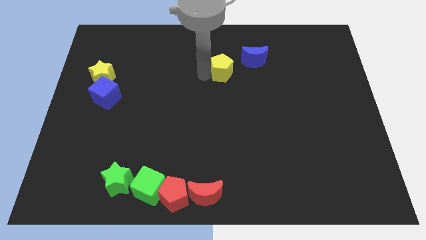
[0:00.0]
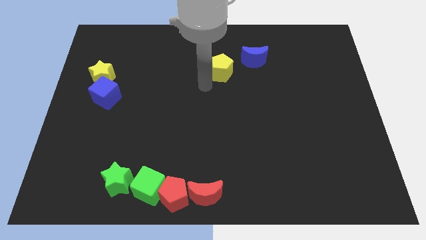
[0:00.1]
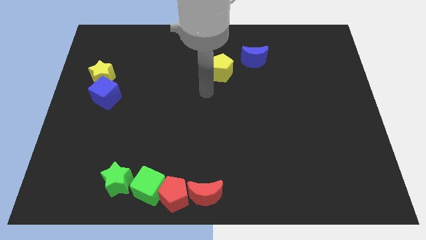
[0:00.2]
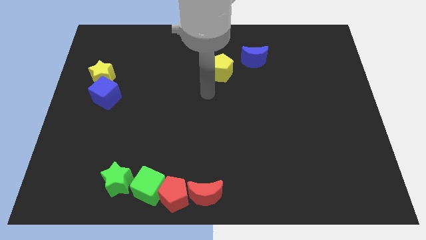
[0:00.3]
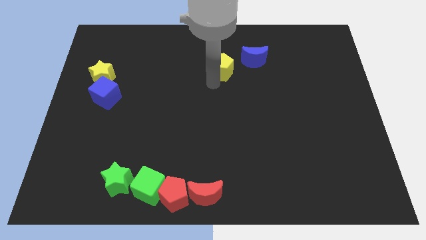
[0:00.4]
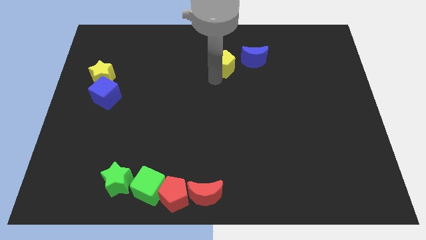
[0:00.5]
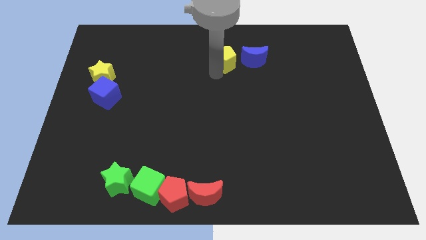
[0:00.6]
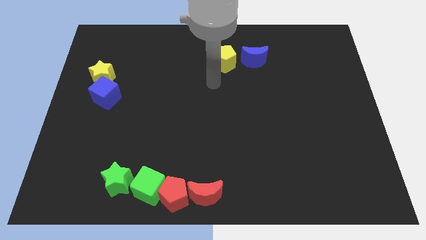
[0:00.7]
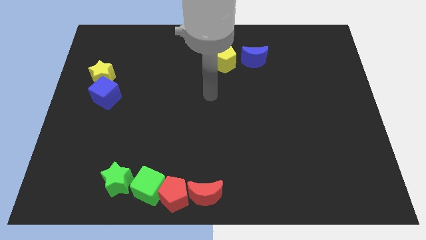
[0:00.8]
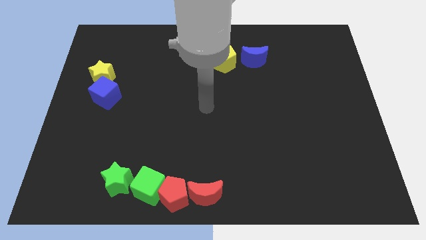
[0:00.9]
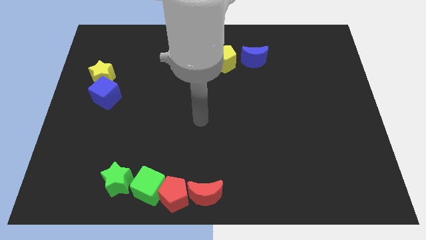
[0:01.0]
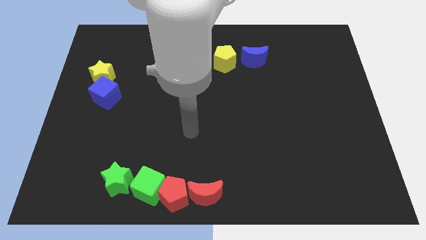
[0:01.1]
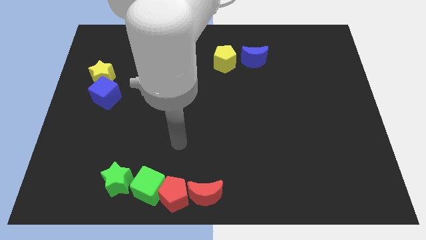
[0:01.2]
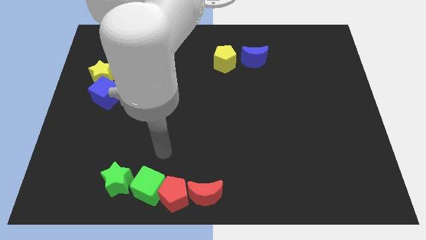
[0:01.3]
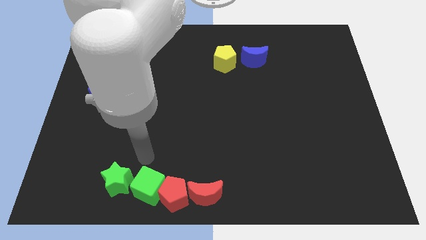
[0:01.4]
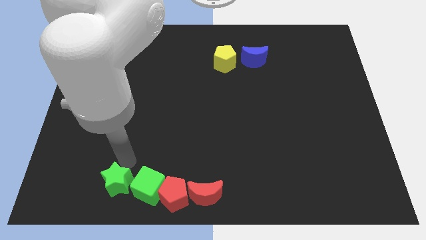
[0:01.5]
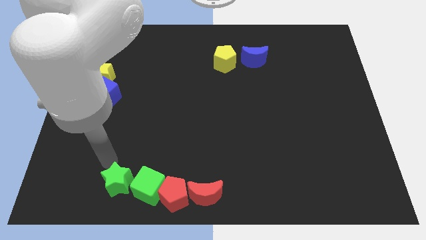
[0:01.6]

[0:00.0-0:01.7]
move your arm away from the yellow pentagon

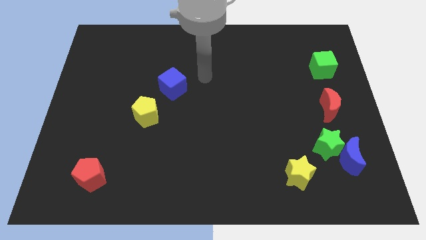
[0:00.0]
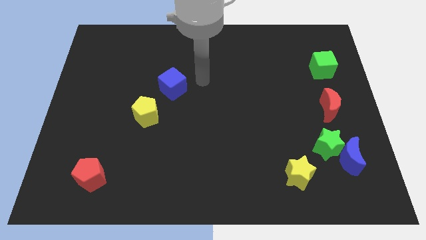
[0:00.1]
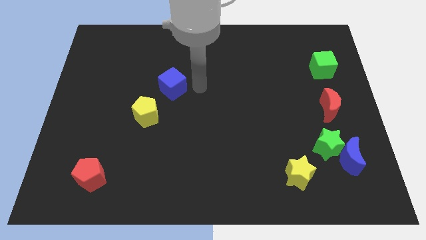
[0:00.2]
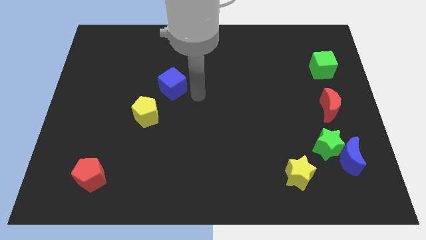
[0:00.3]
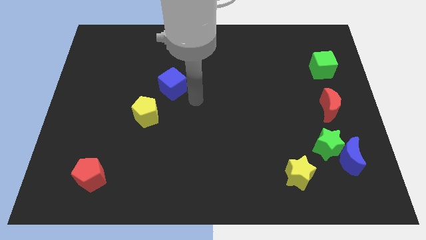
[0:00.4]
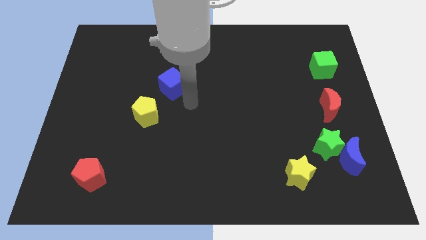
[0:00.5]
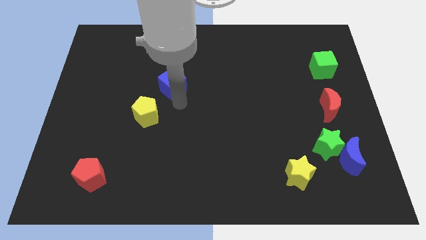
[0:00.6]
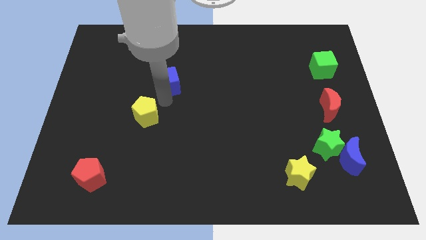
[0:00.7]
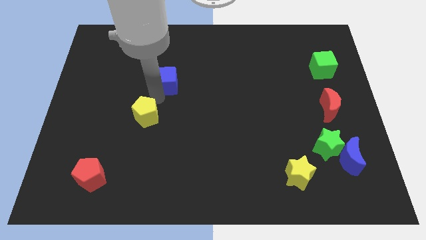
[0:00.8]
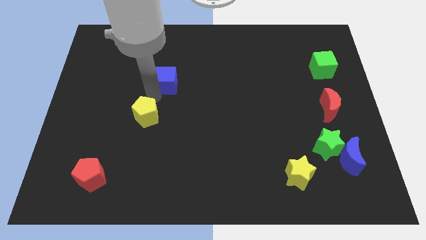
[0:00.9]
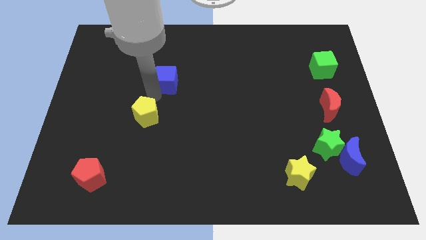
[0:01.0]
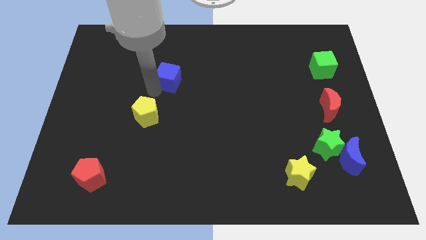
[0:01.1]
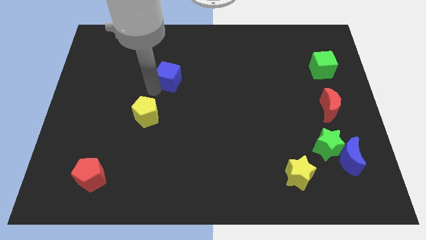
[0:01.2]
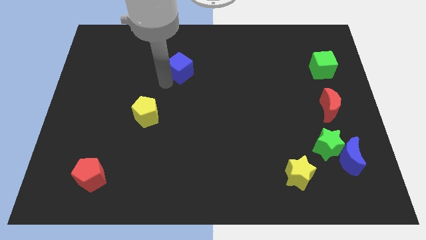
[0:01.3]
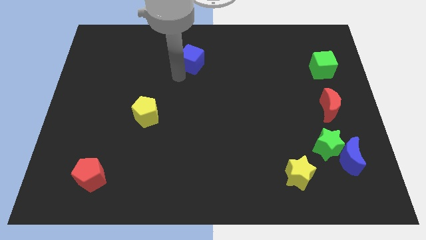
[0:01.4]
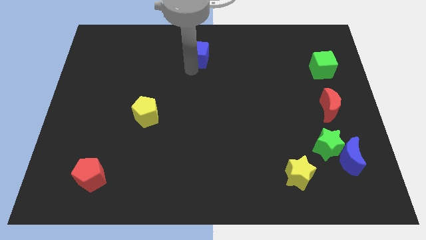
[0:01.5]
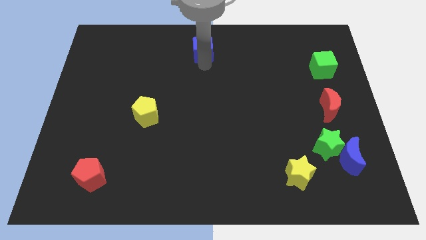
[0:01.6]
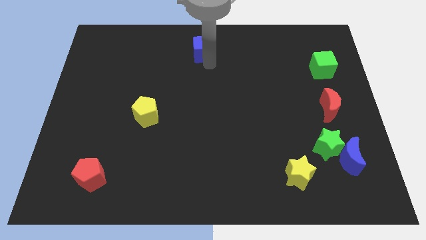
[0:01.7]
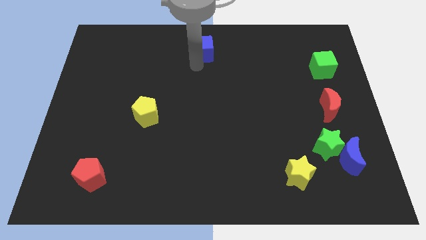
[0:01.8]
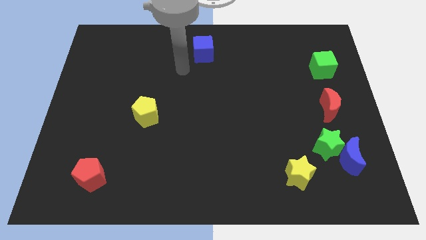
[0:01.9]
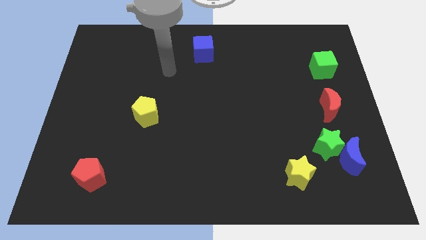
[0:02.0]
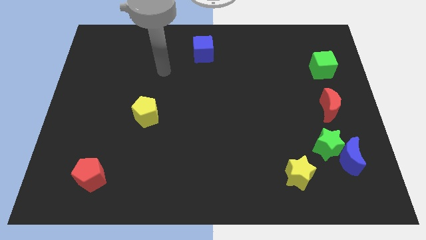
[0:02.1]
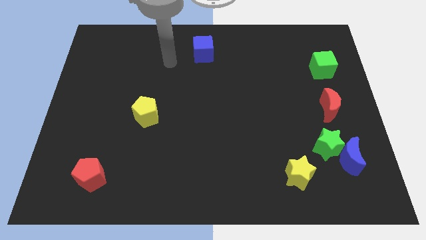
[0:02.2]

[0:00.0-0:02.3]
place the blue cube at the top center of the board

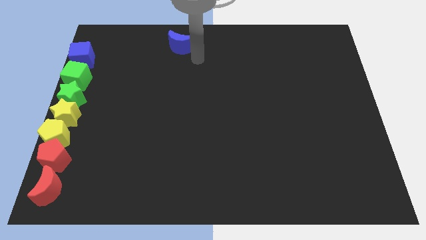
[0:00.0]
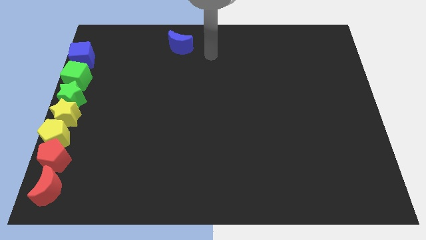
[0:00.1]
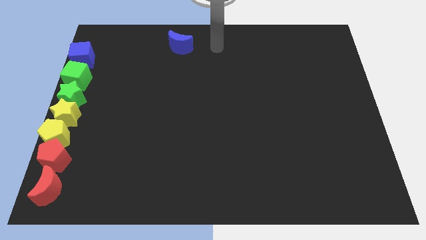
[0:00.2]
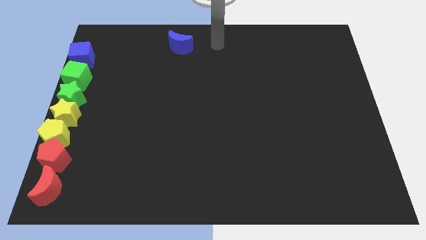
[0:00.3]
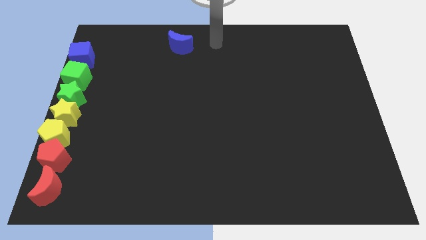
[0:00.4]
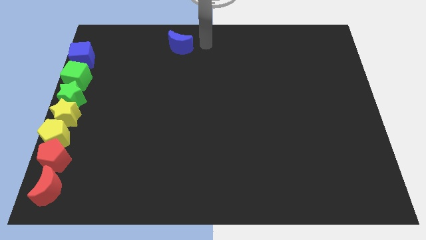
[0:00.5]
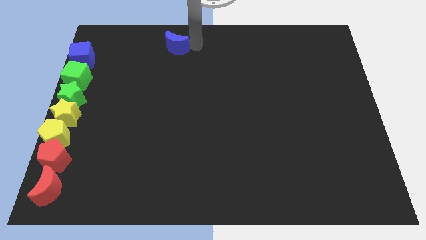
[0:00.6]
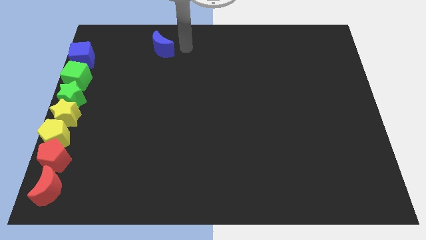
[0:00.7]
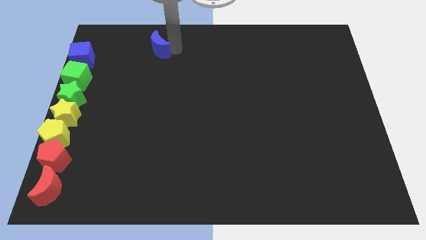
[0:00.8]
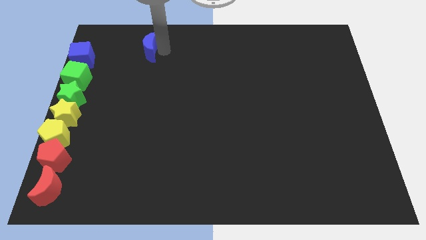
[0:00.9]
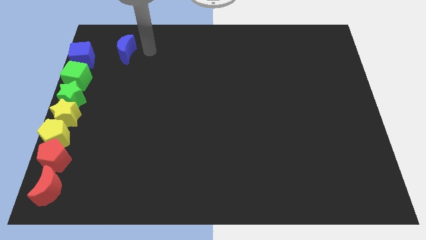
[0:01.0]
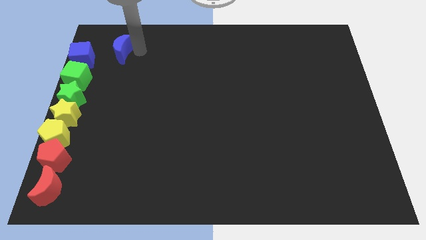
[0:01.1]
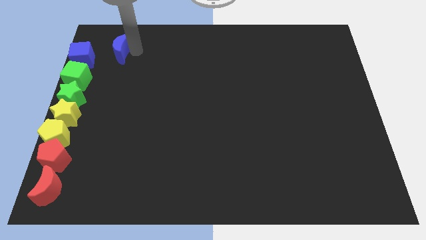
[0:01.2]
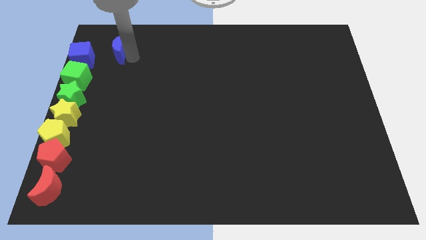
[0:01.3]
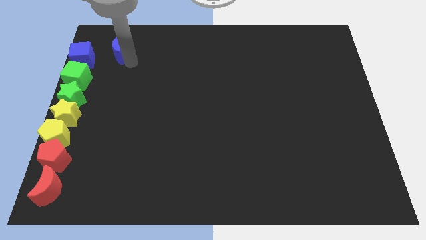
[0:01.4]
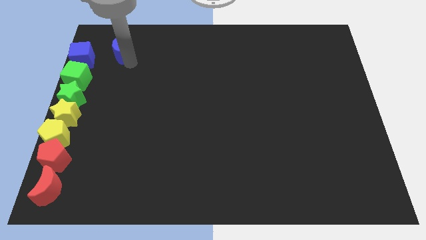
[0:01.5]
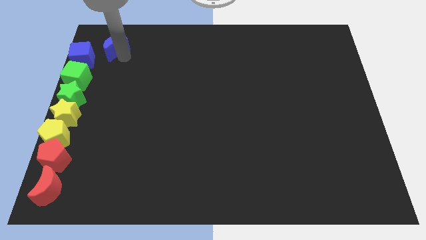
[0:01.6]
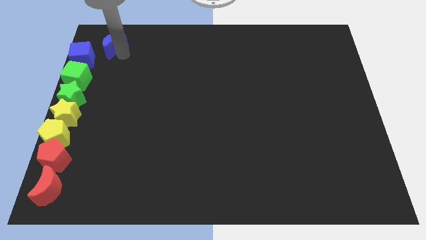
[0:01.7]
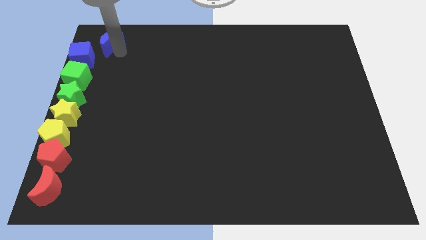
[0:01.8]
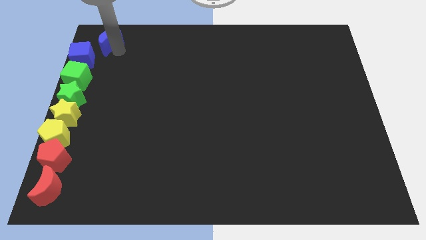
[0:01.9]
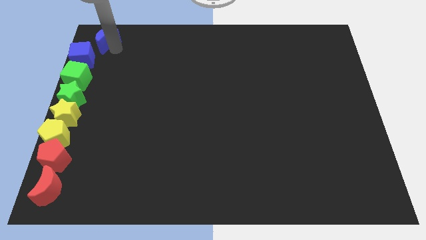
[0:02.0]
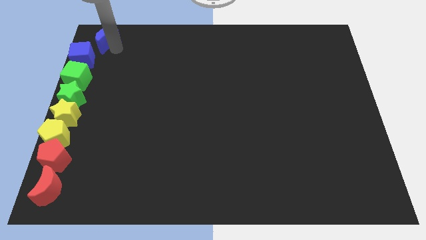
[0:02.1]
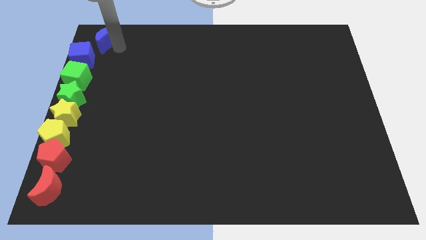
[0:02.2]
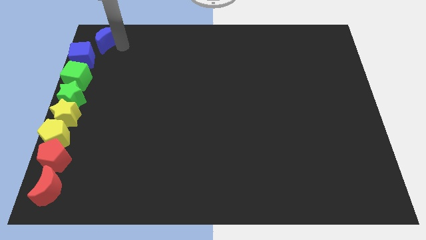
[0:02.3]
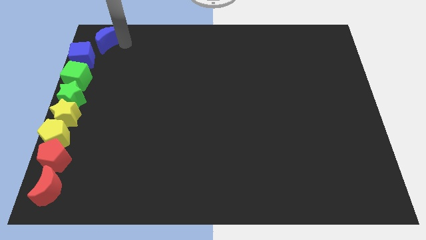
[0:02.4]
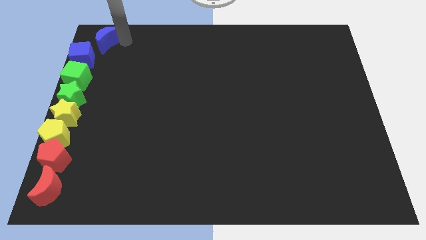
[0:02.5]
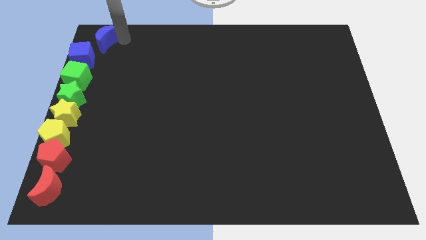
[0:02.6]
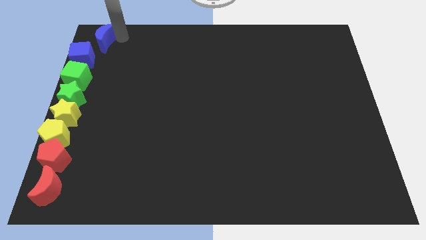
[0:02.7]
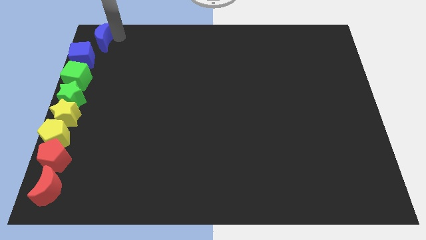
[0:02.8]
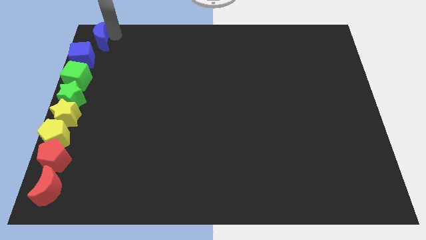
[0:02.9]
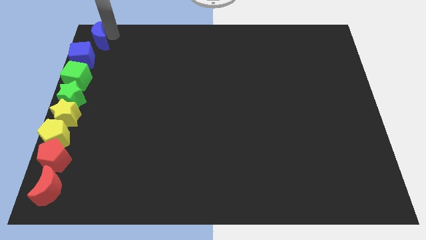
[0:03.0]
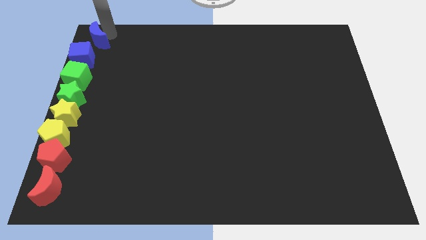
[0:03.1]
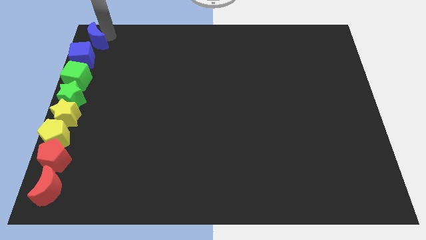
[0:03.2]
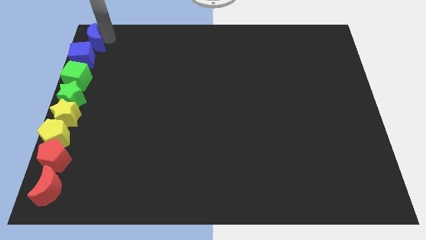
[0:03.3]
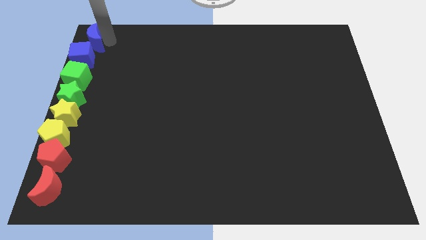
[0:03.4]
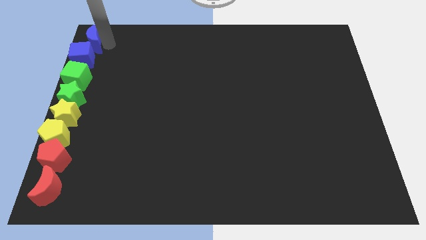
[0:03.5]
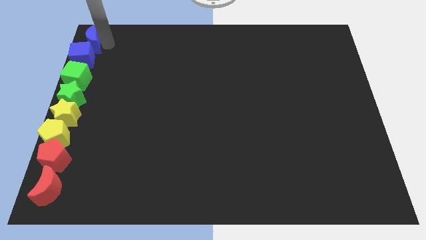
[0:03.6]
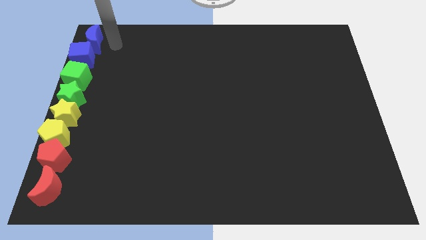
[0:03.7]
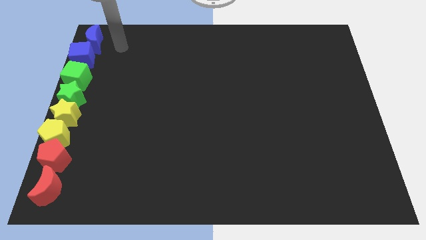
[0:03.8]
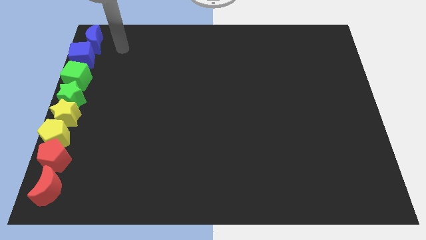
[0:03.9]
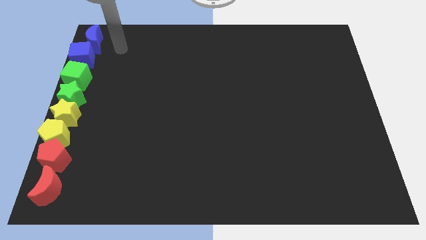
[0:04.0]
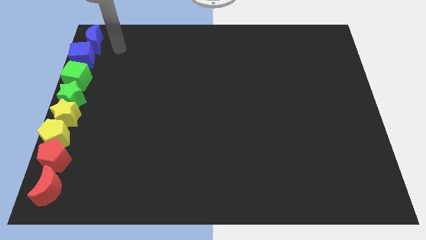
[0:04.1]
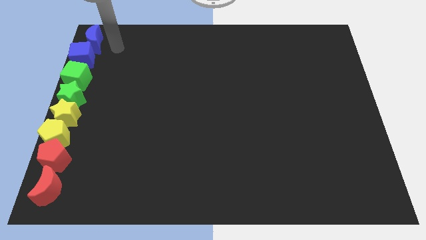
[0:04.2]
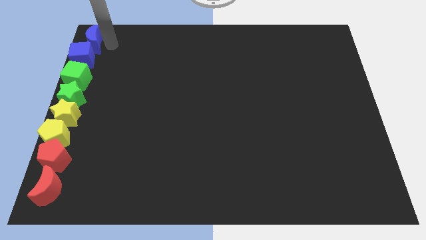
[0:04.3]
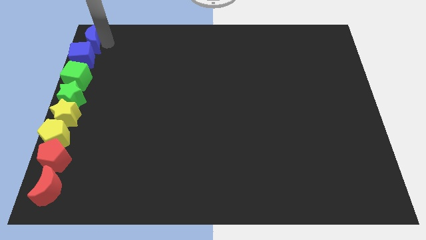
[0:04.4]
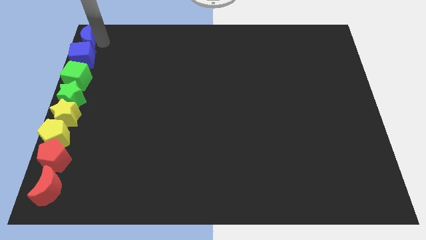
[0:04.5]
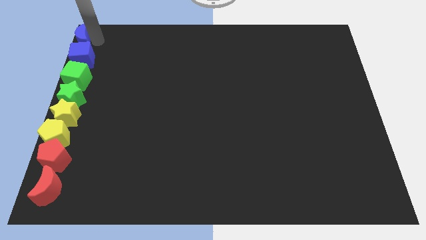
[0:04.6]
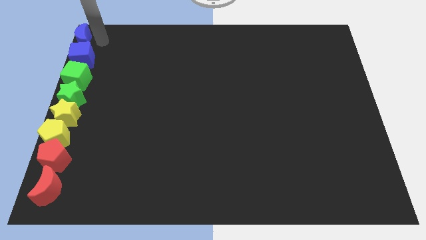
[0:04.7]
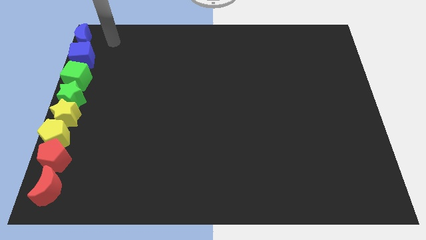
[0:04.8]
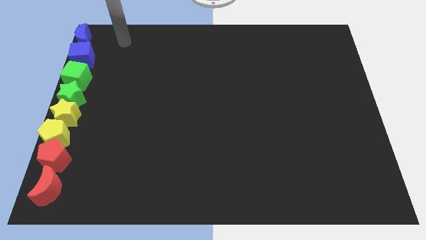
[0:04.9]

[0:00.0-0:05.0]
place the blue crescent on top of the blue cube to form a vertical line
